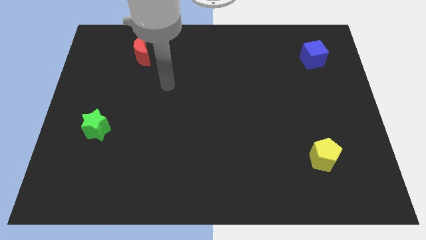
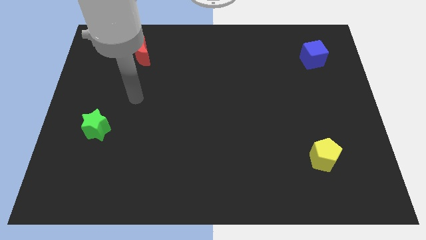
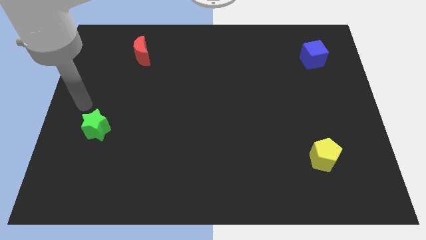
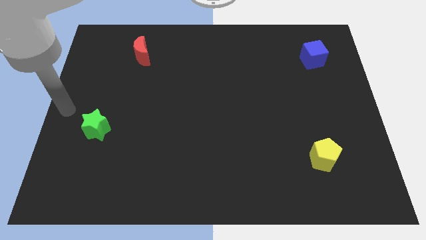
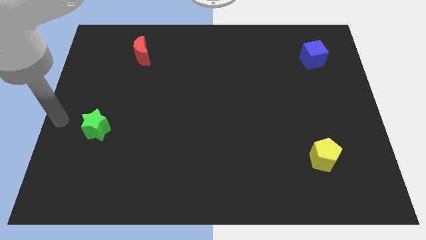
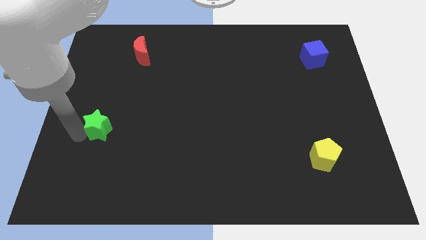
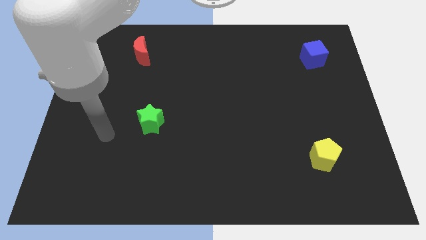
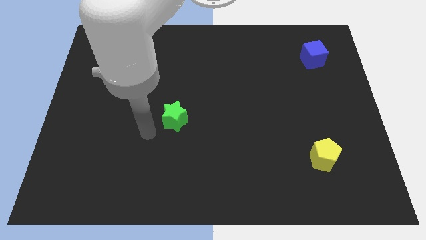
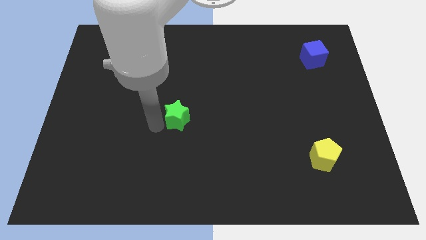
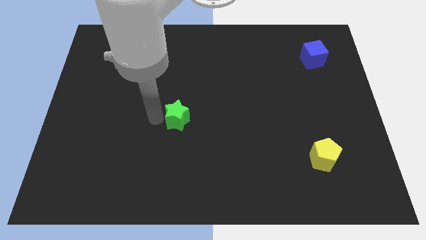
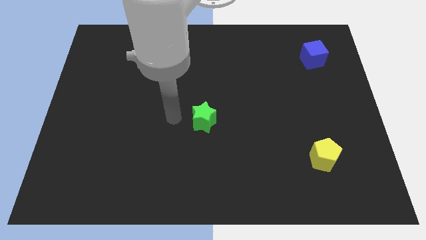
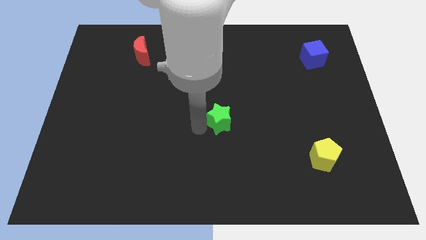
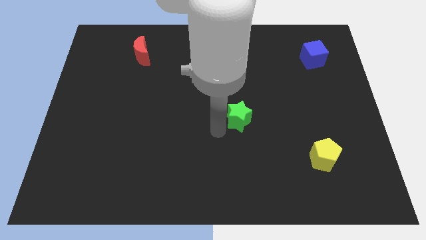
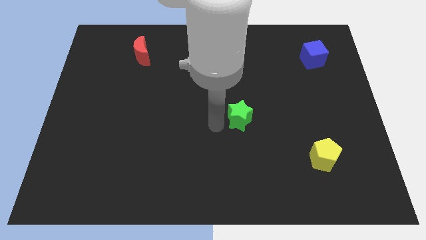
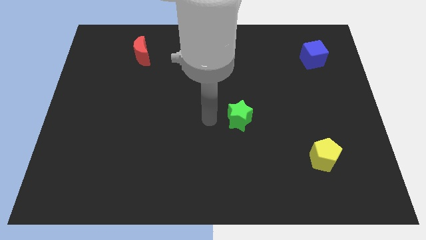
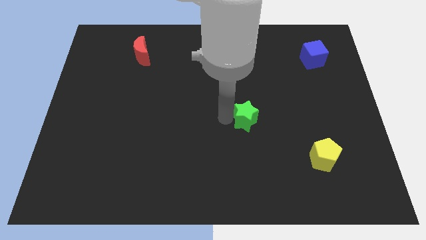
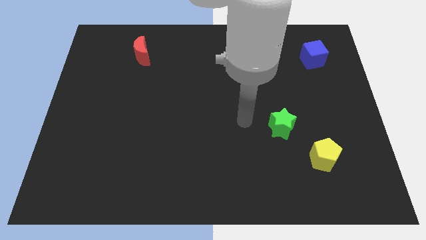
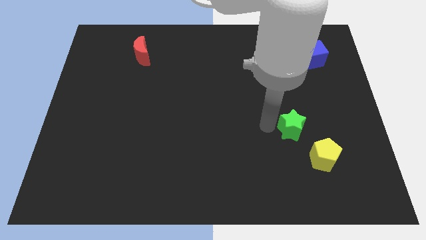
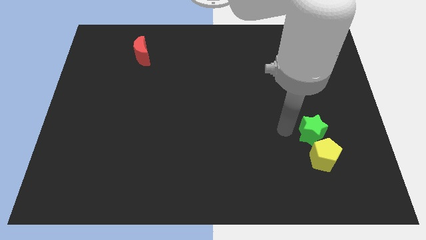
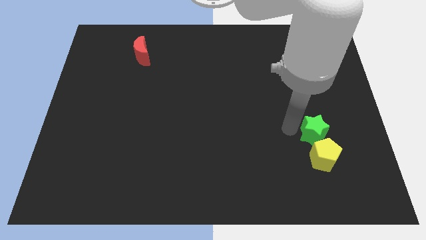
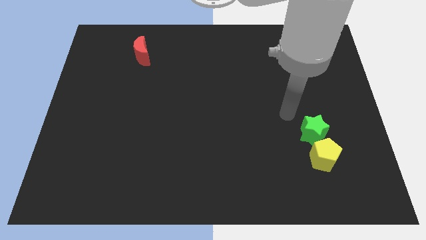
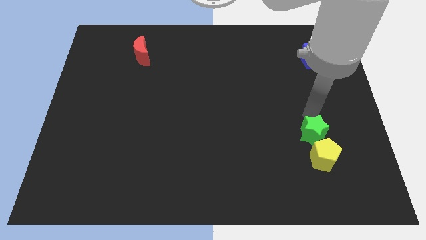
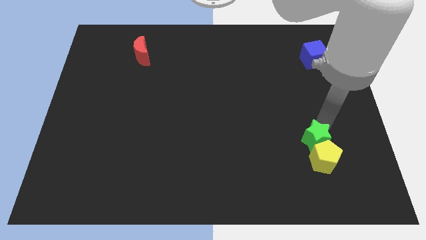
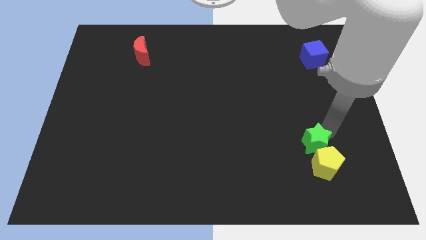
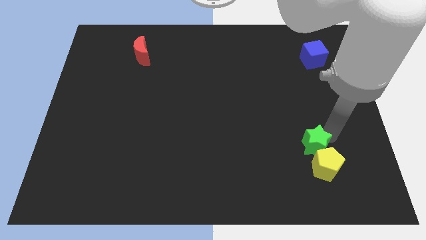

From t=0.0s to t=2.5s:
put the star to the pentagon

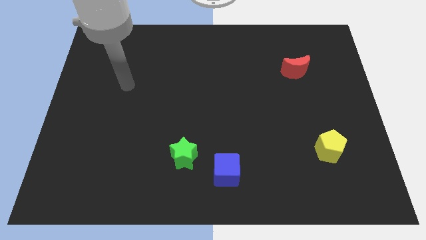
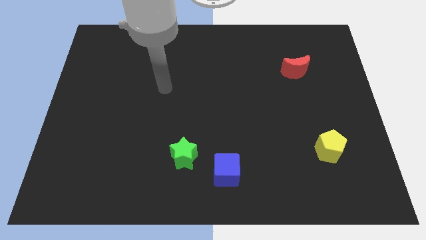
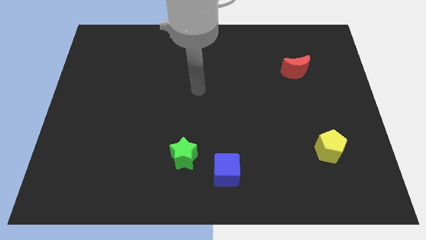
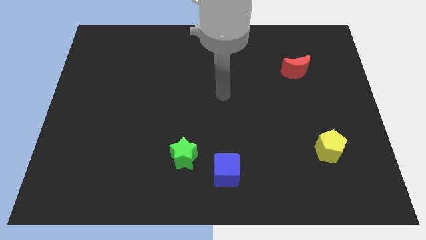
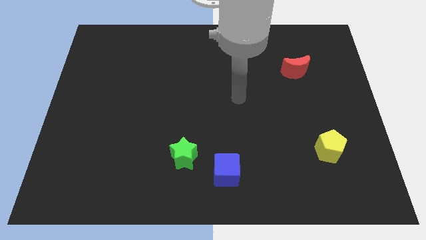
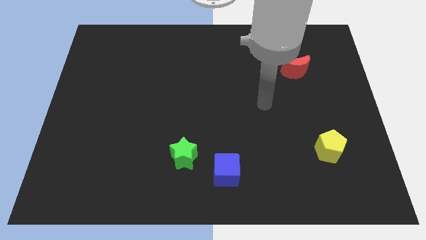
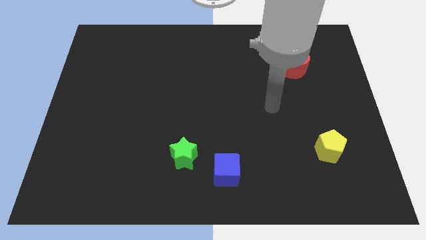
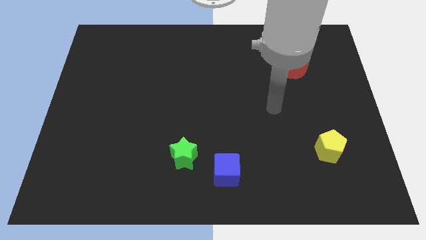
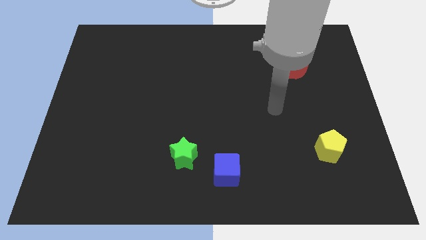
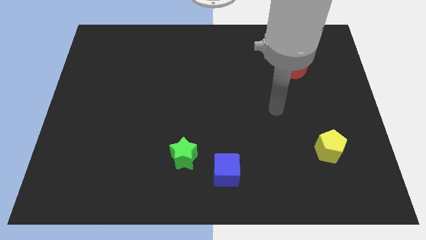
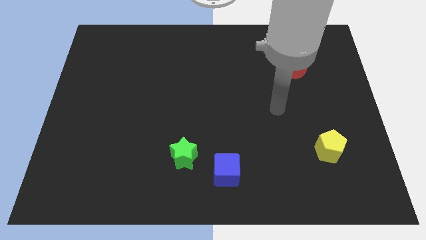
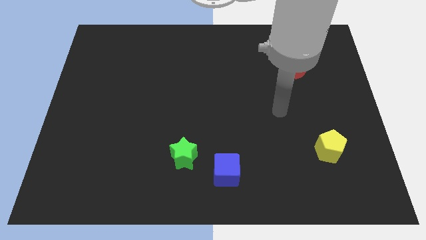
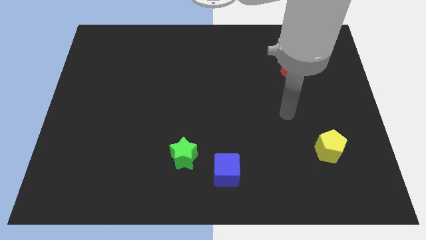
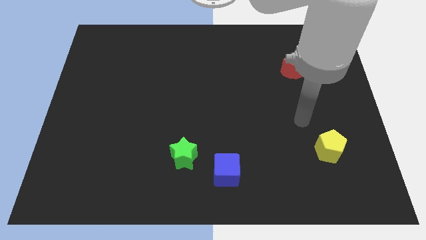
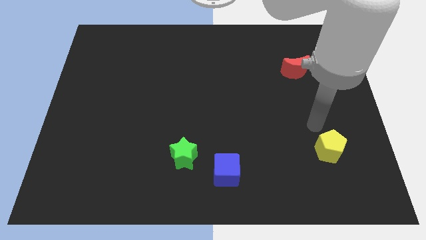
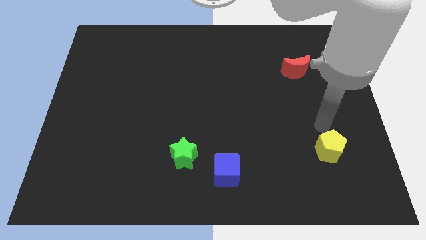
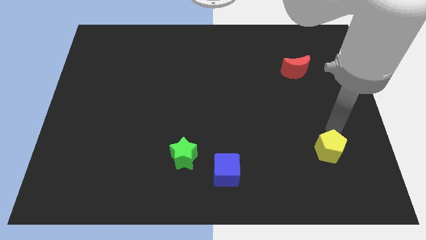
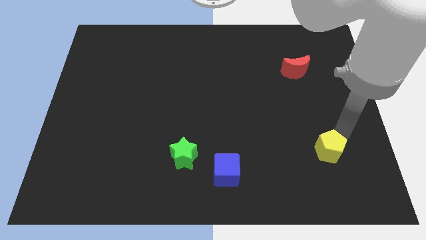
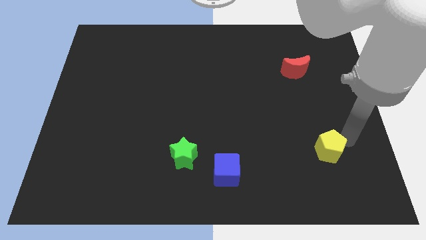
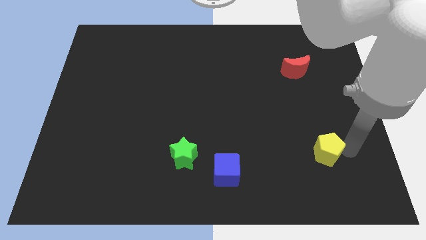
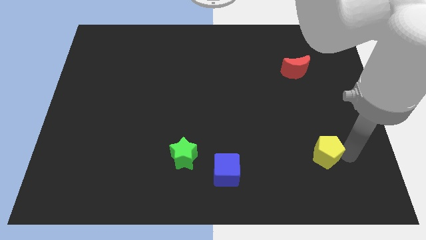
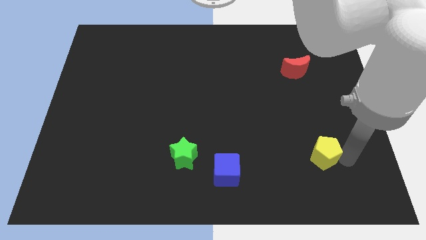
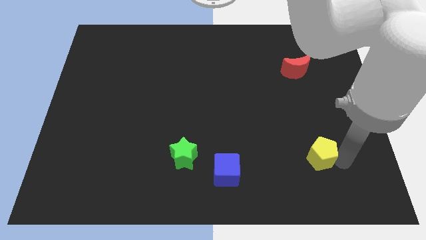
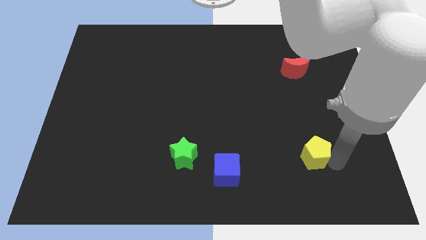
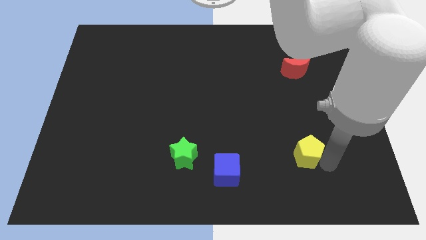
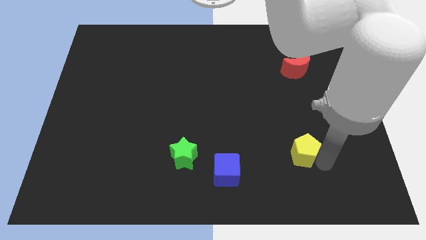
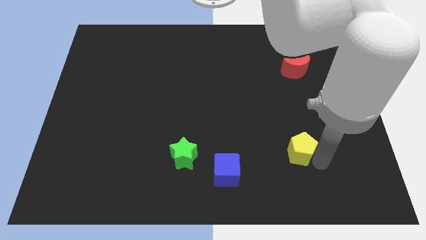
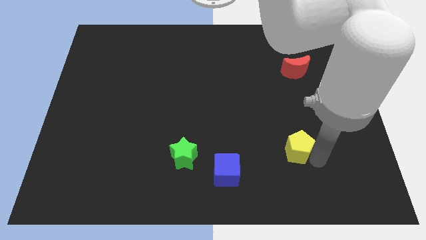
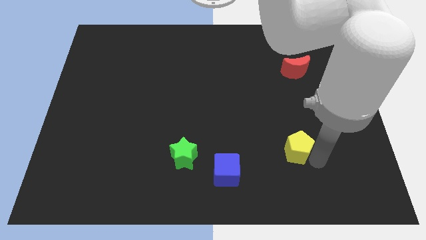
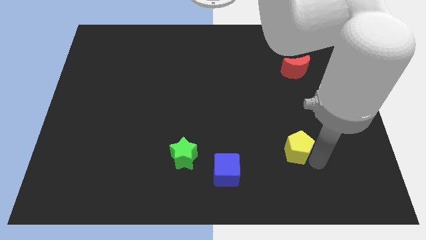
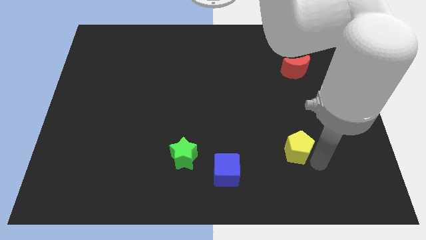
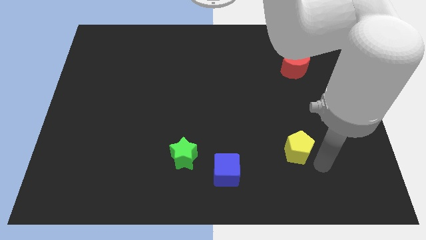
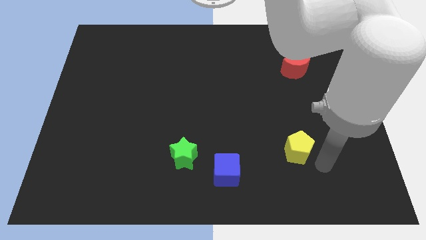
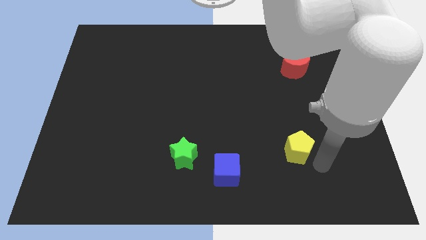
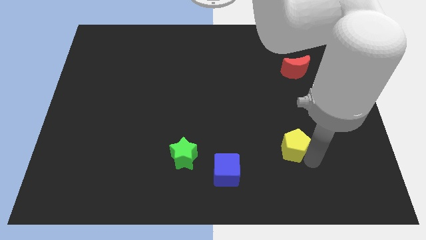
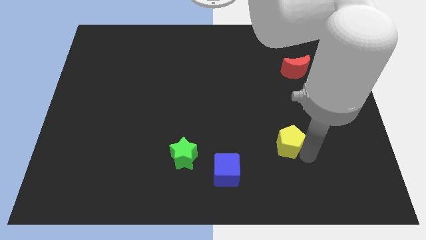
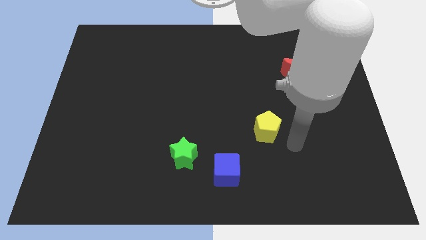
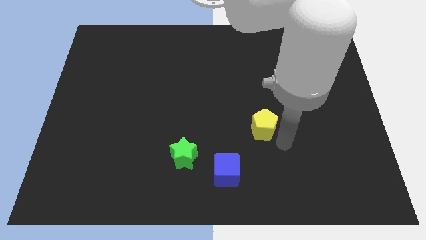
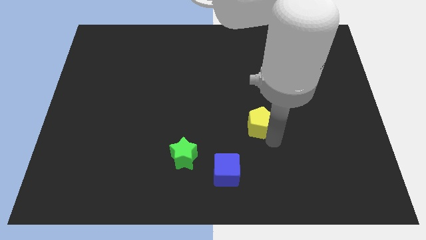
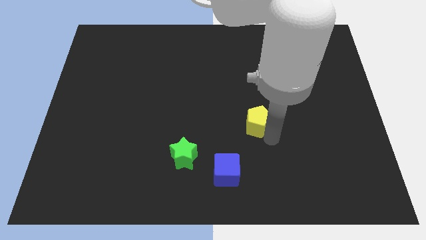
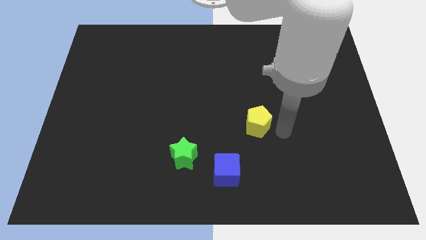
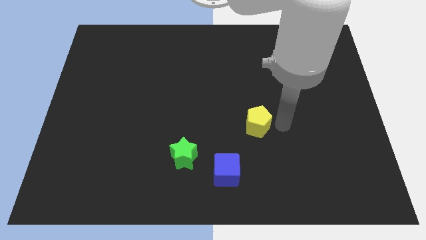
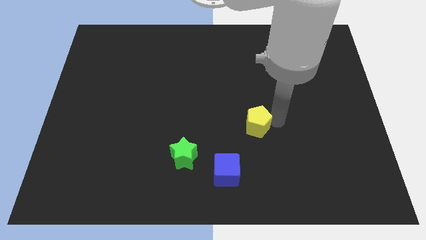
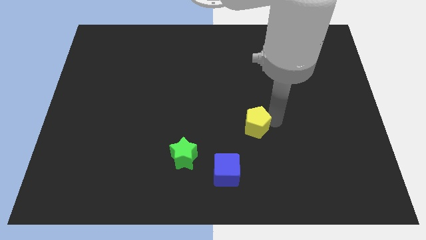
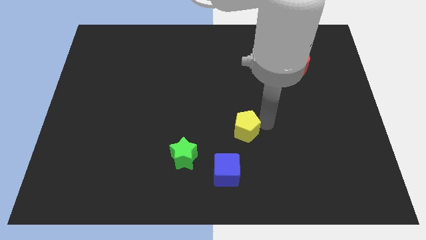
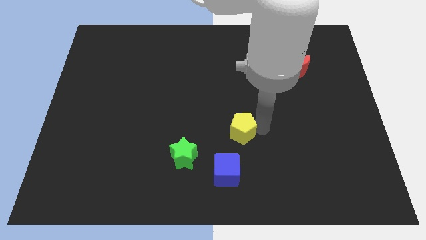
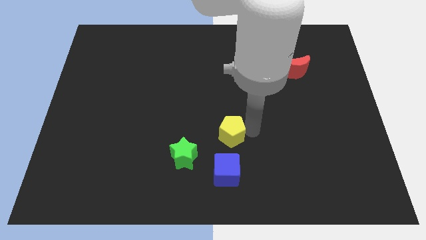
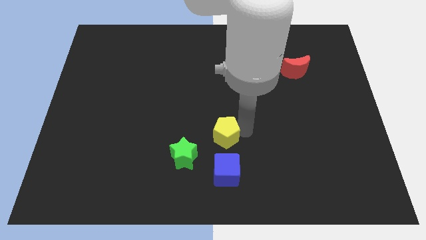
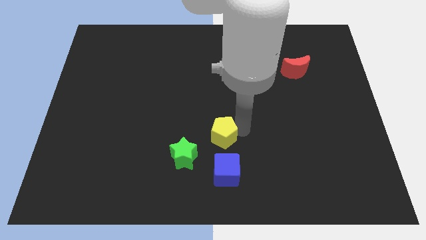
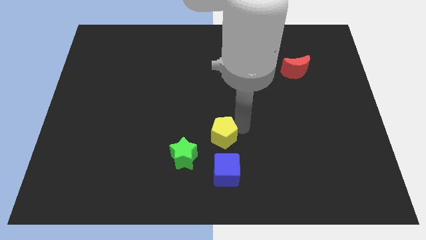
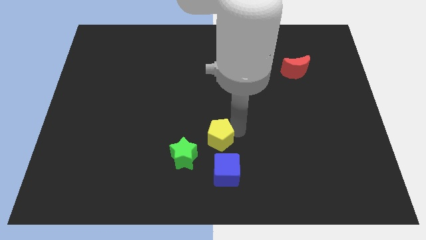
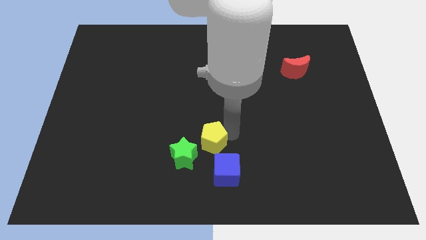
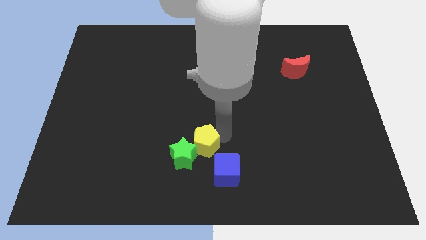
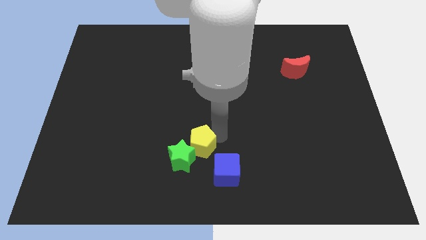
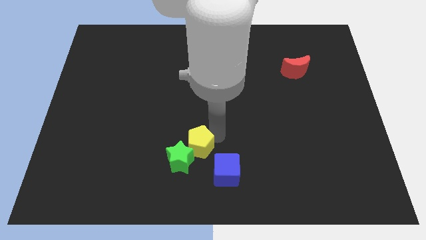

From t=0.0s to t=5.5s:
put the yellow block towards the green star

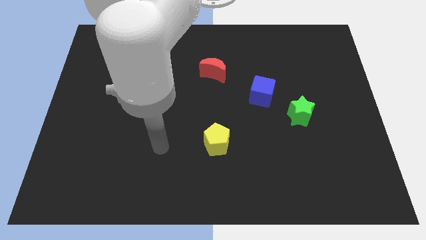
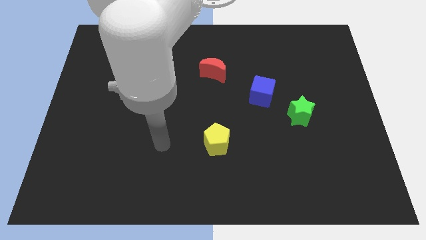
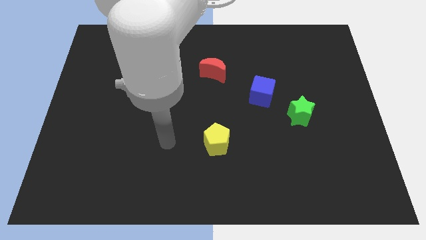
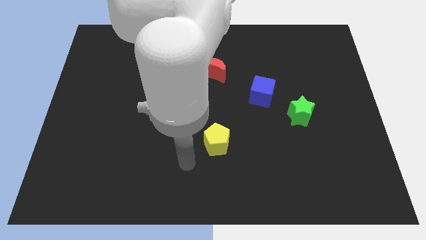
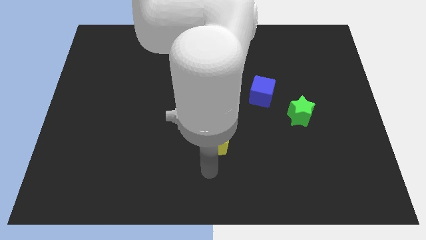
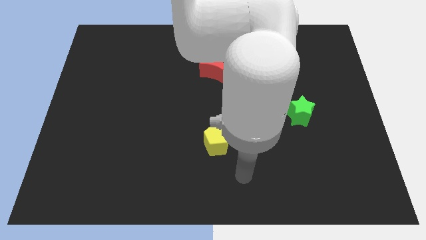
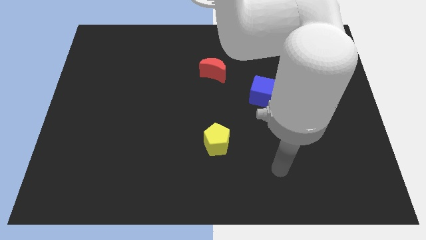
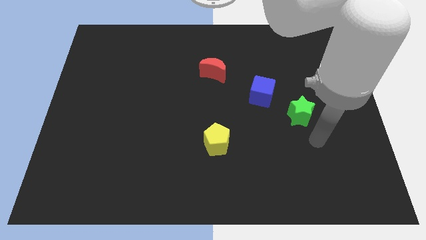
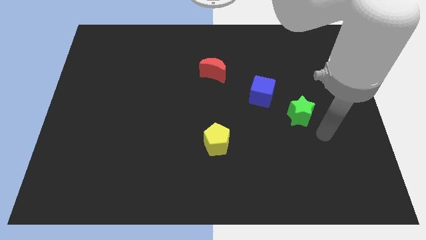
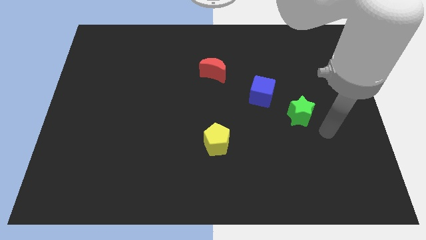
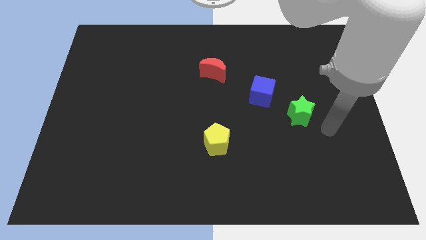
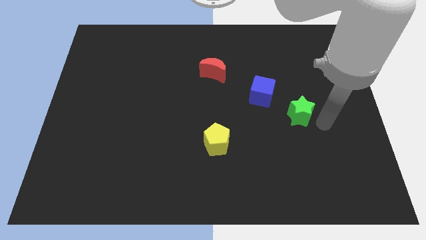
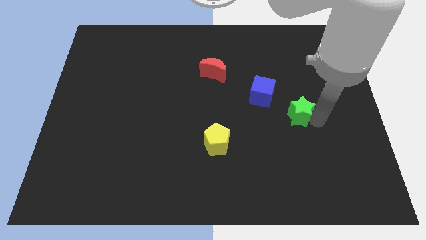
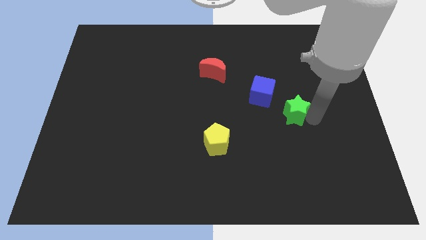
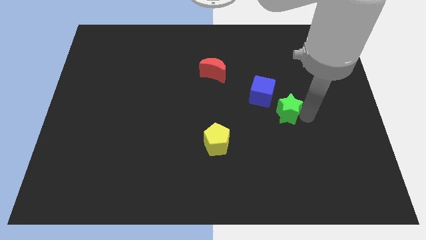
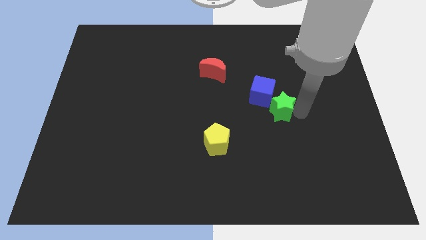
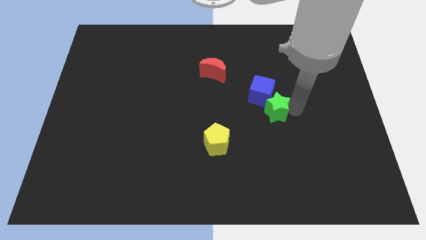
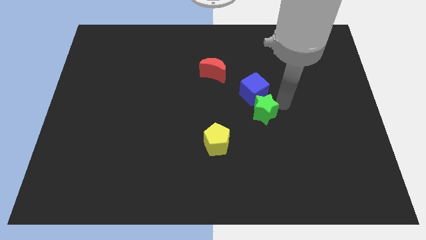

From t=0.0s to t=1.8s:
move the green block to the cube
